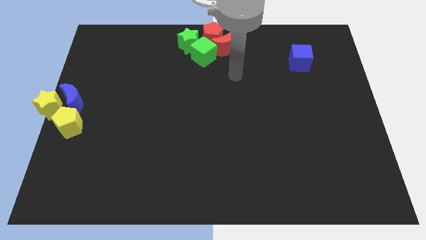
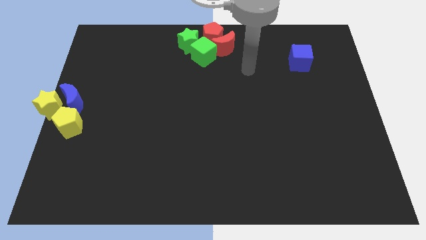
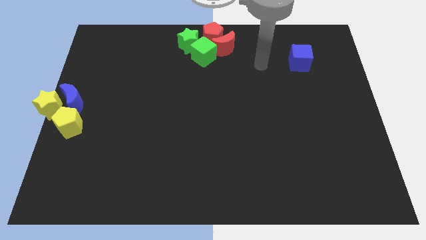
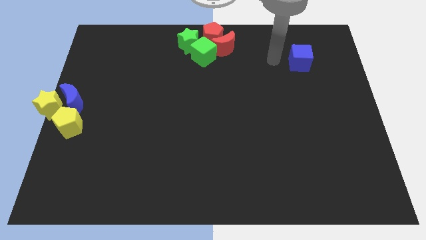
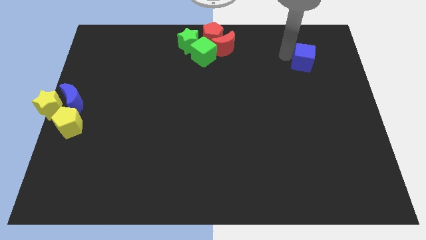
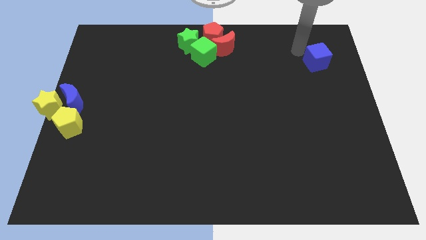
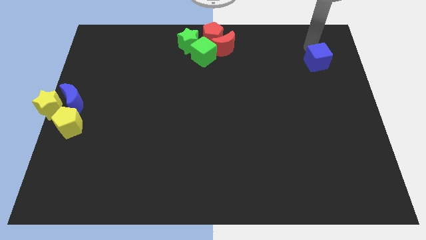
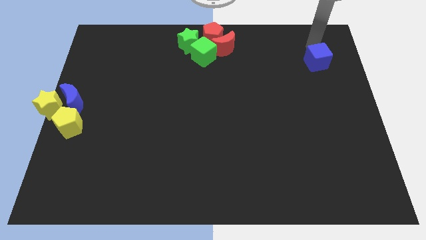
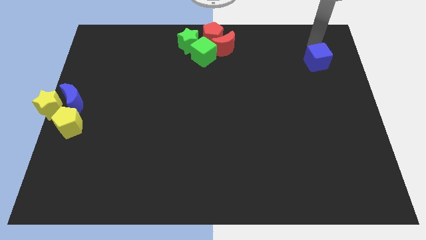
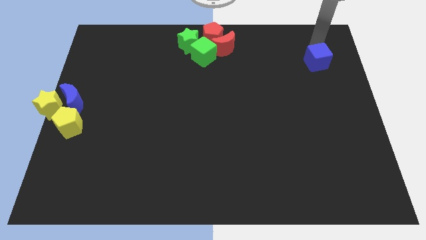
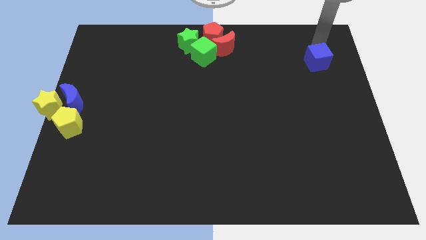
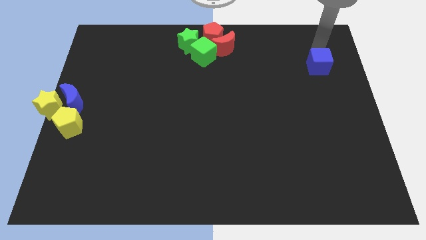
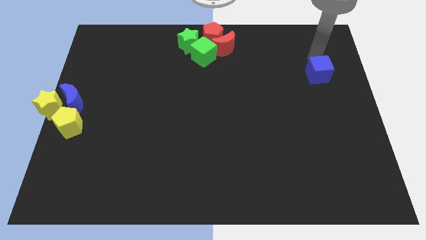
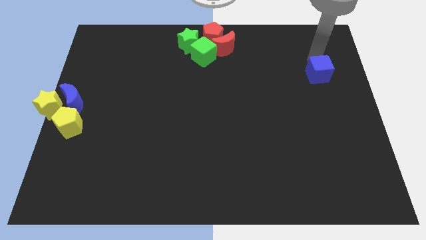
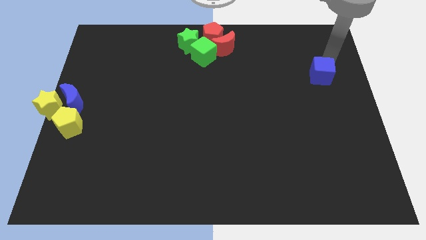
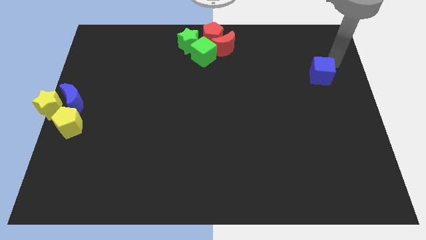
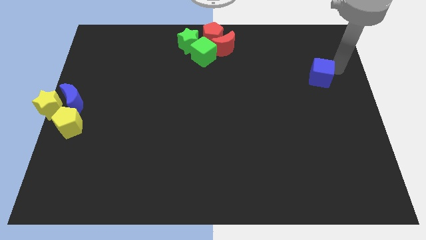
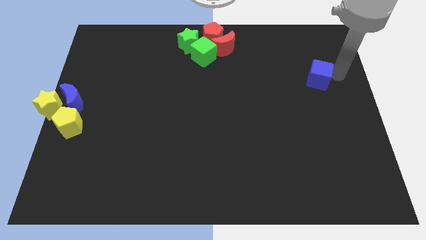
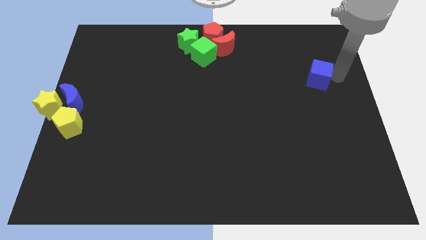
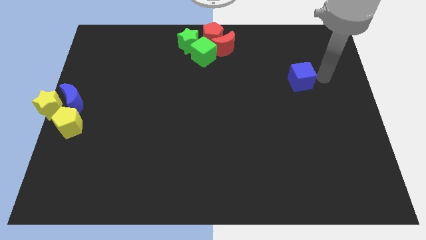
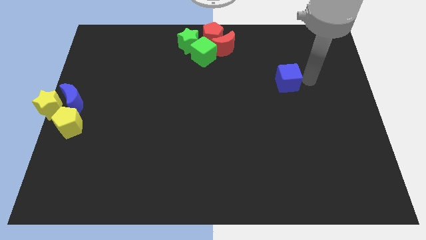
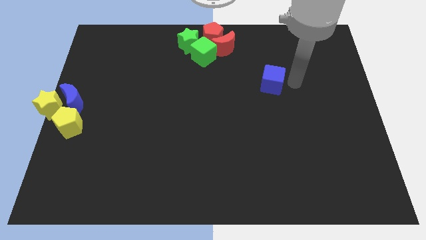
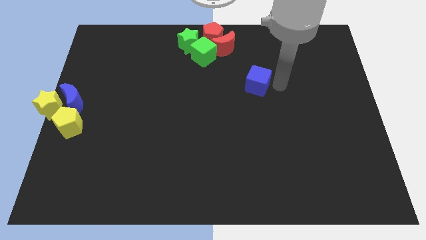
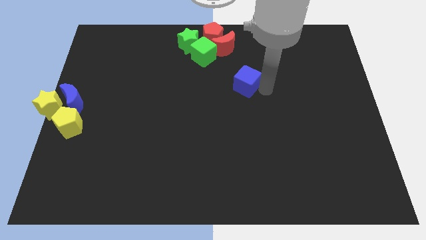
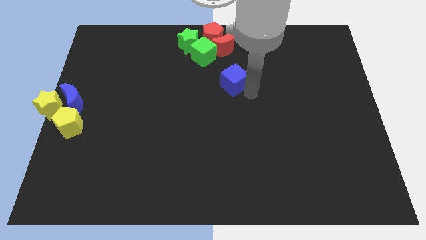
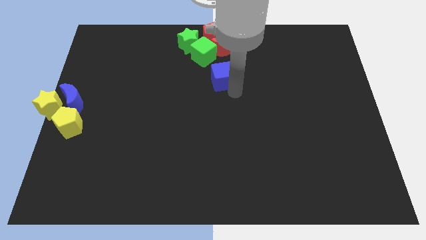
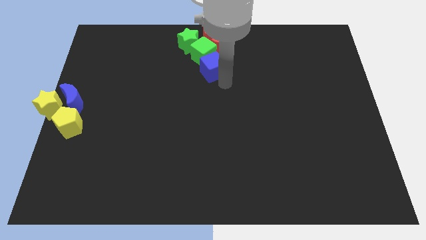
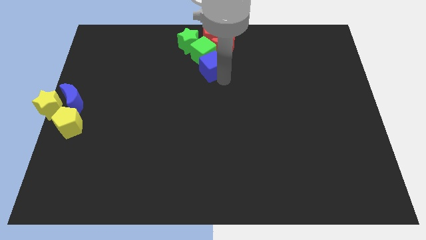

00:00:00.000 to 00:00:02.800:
move blue cube right below the green cube

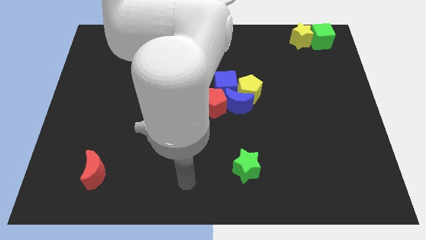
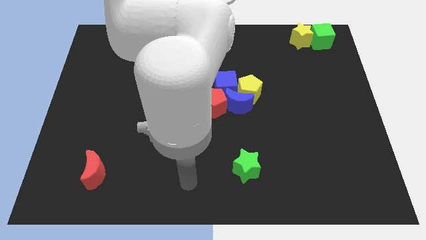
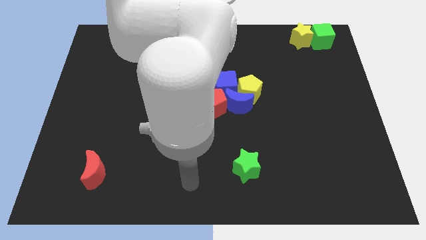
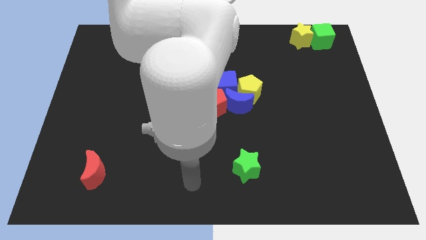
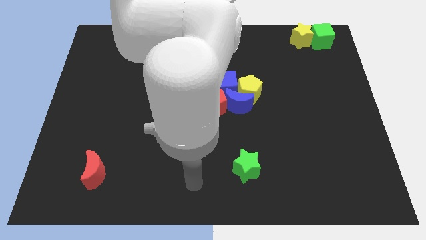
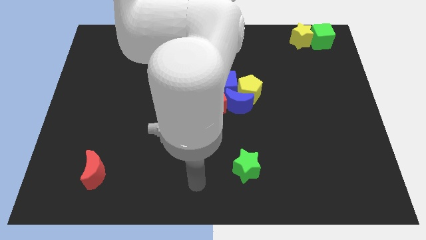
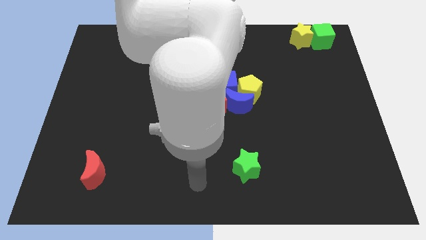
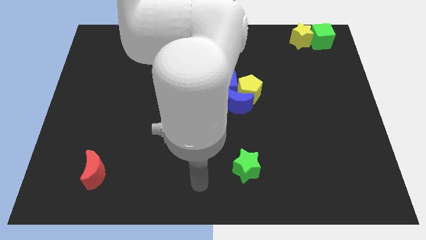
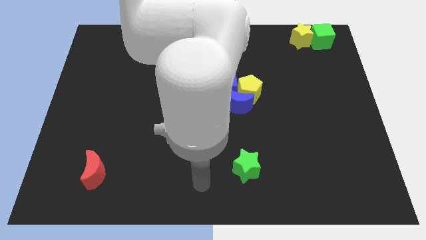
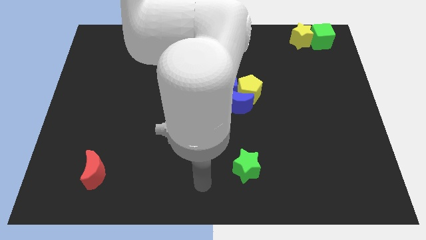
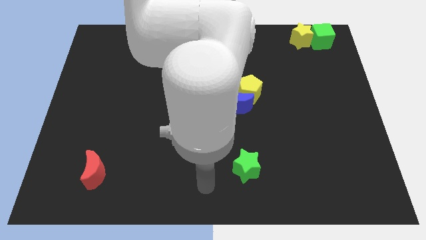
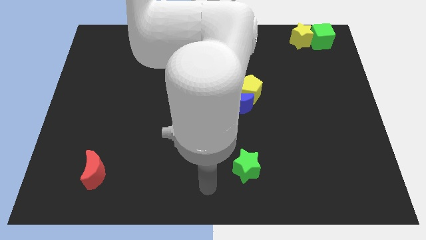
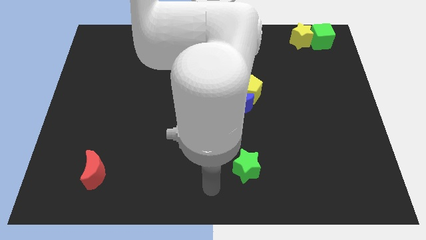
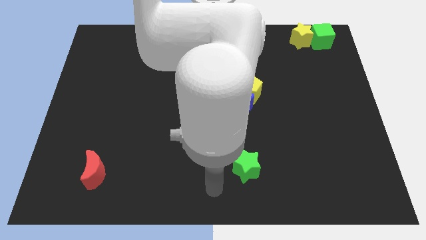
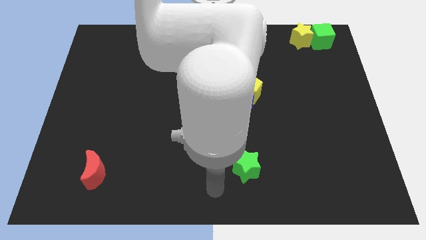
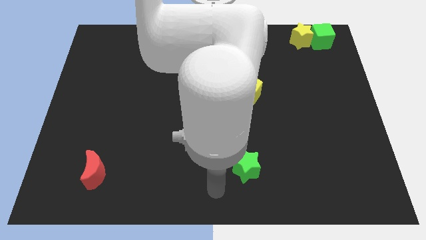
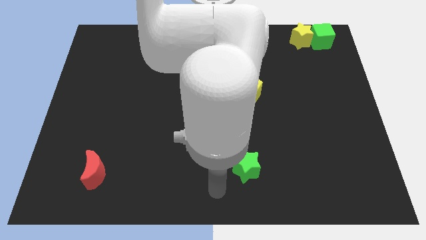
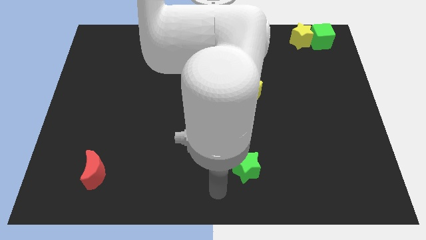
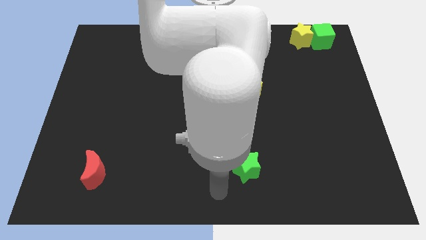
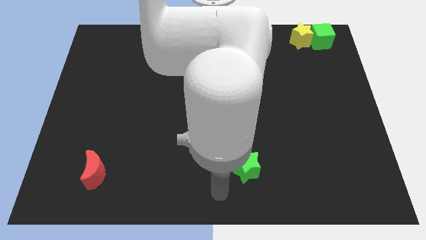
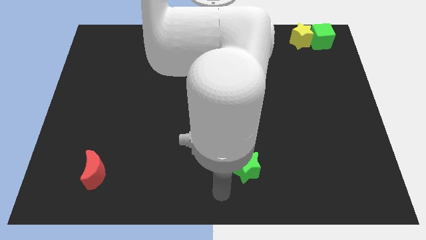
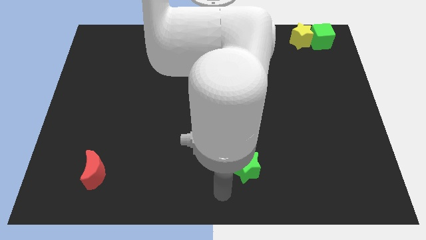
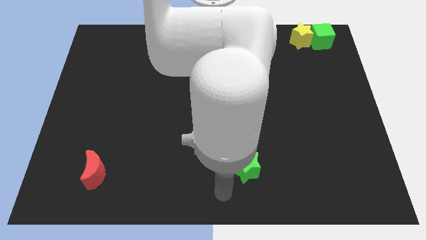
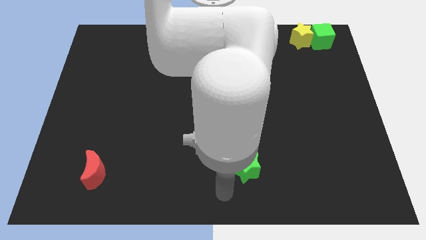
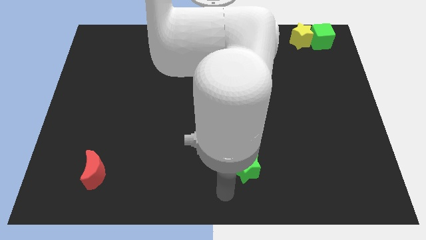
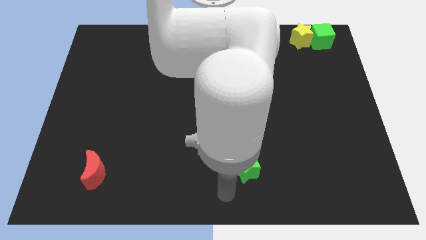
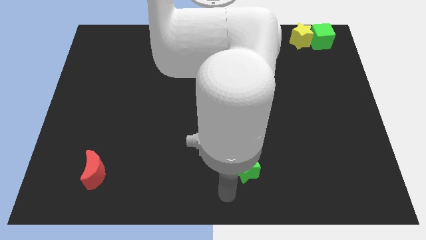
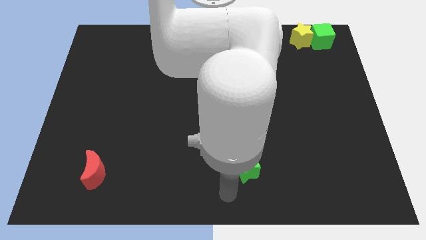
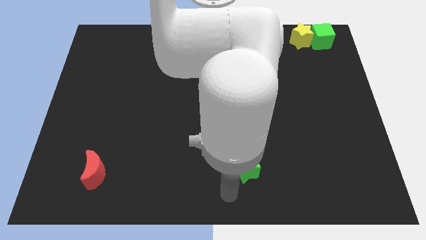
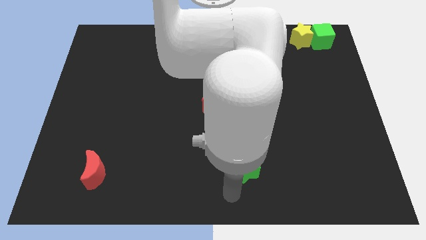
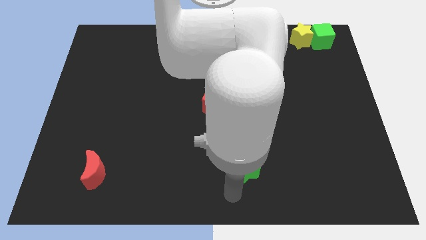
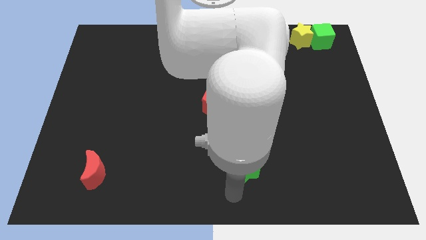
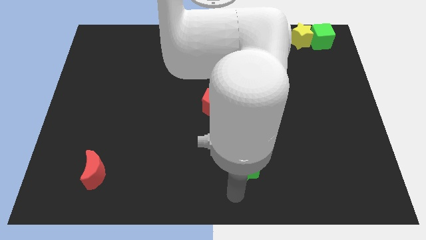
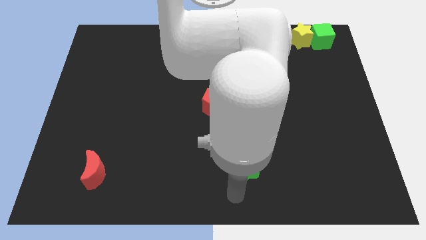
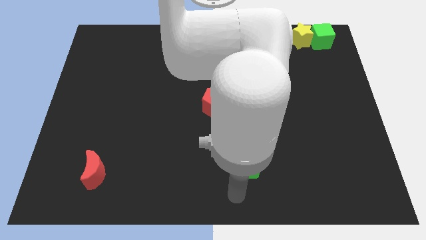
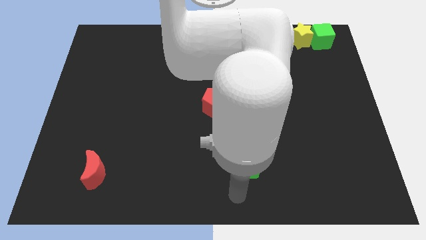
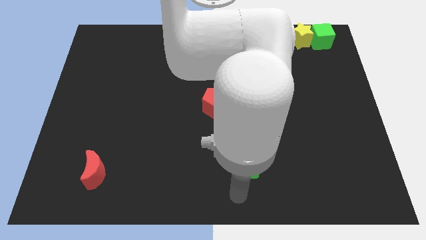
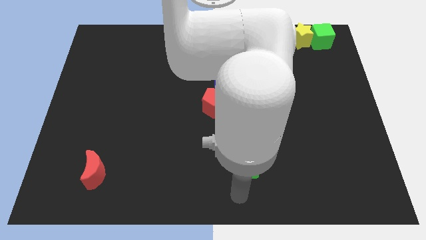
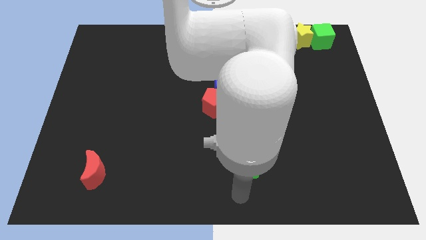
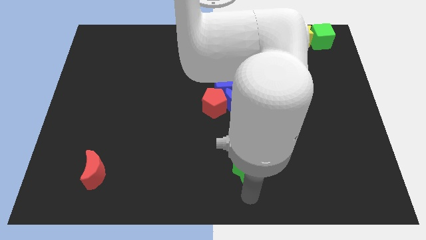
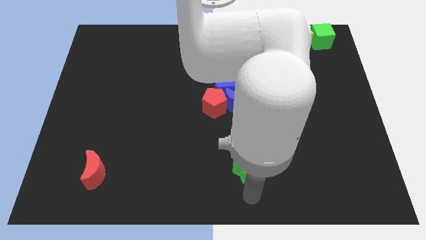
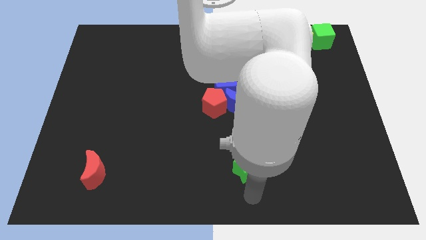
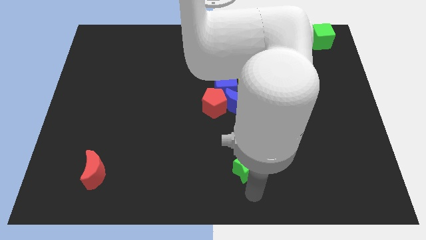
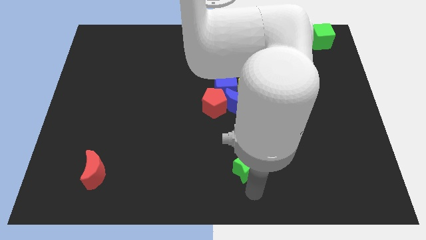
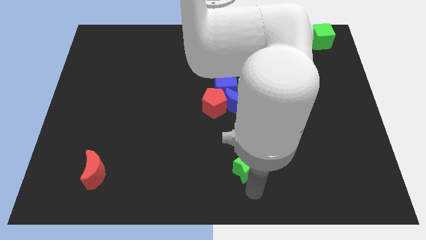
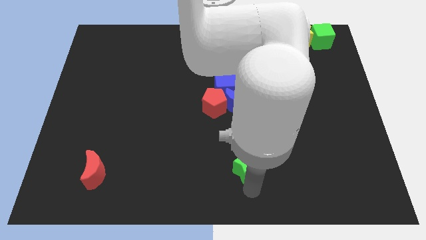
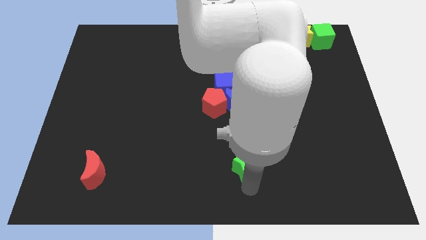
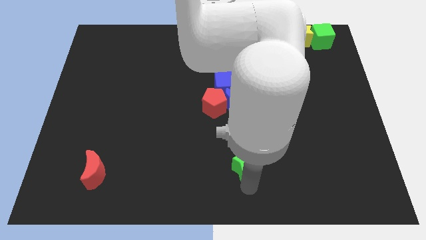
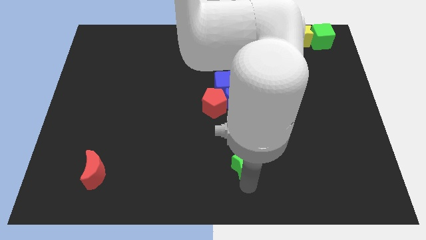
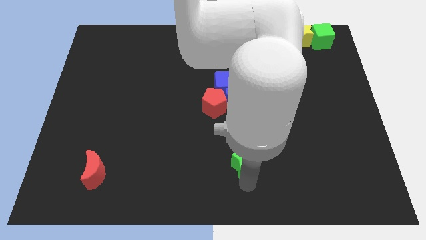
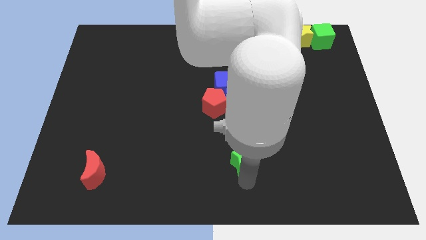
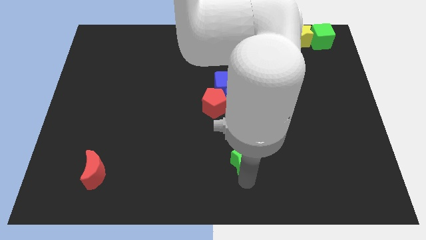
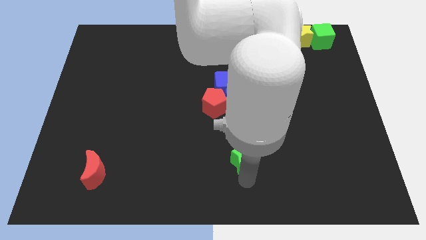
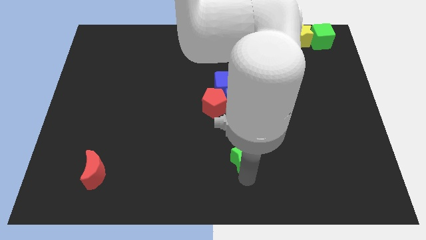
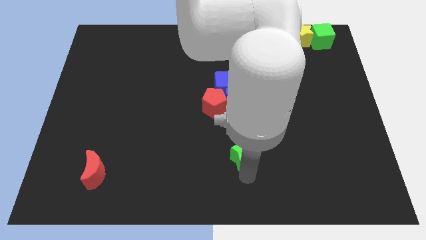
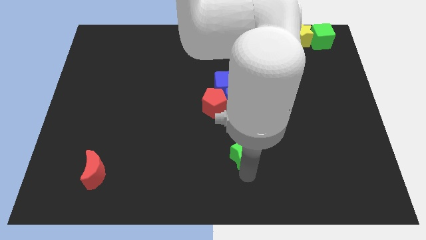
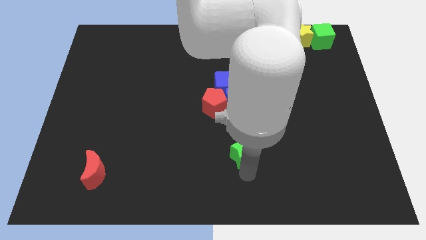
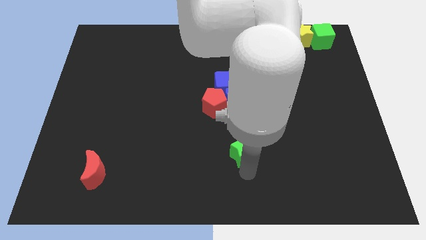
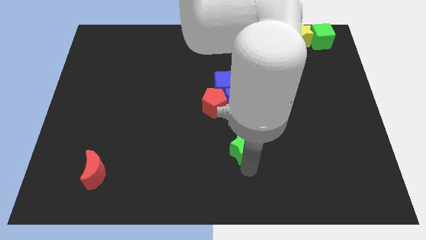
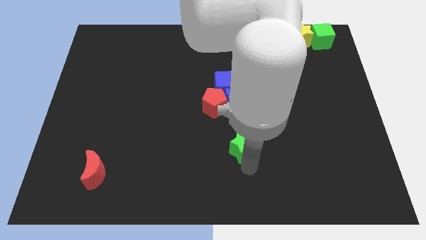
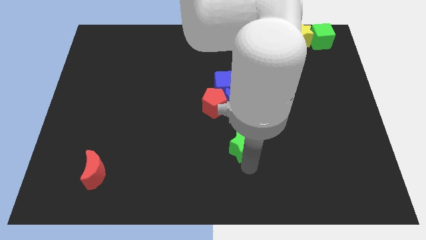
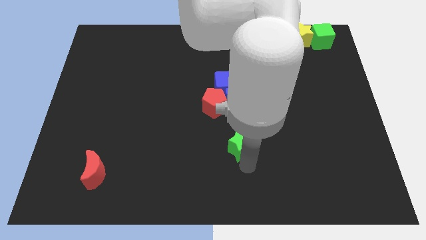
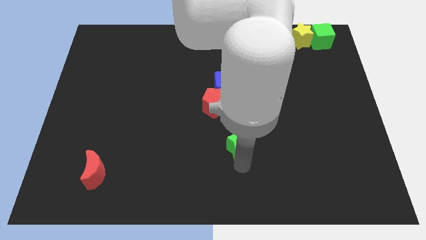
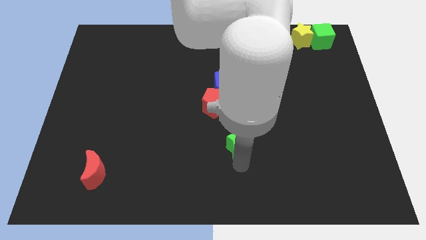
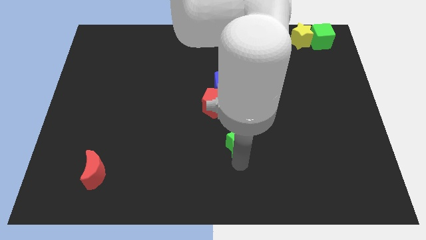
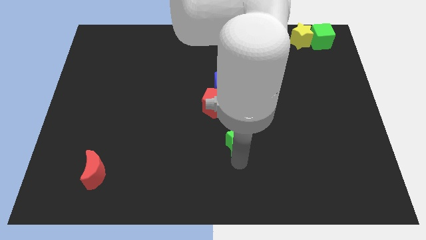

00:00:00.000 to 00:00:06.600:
push green star towards up side
